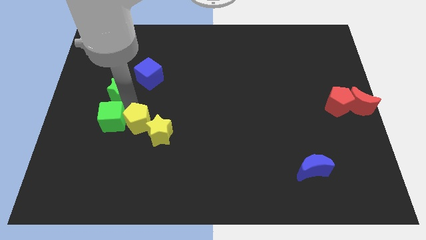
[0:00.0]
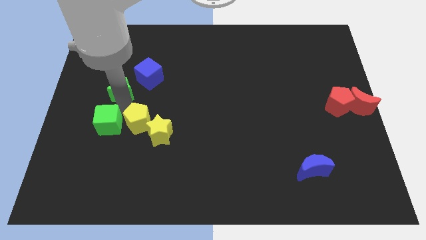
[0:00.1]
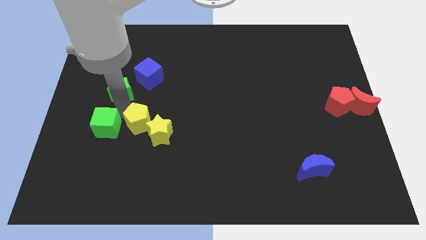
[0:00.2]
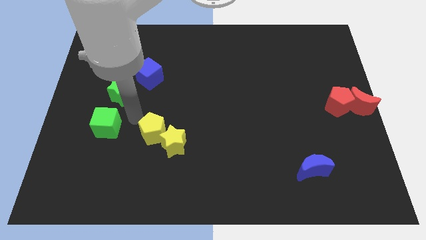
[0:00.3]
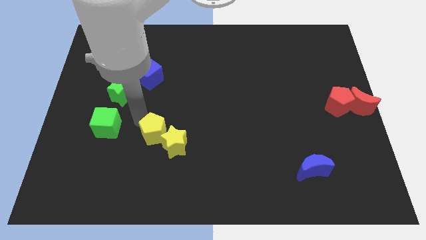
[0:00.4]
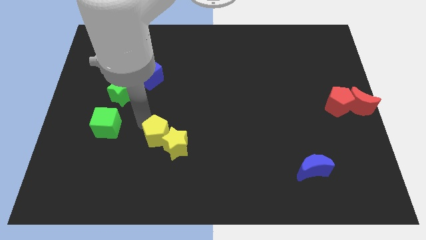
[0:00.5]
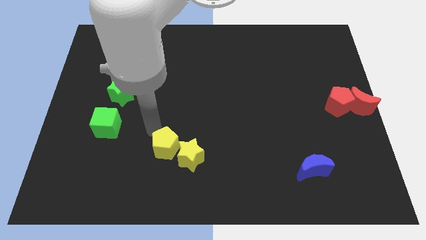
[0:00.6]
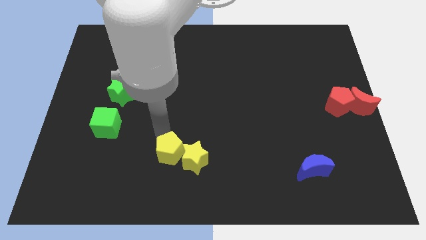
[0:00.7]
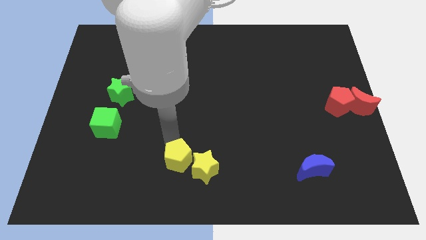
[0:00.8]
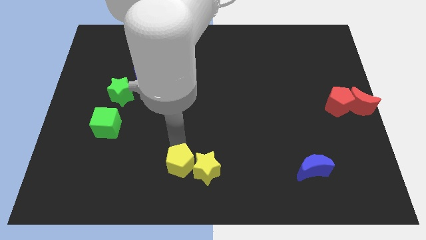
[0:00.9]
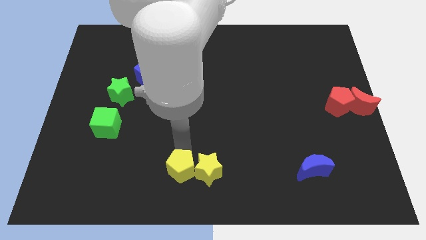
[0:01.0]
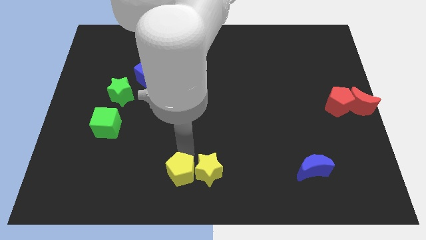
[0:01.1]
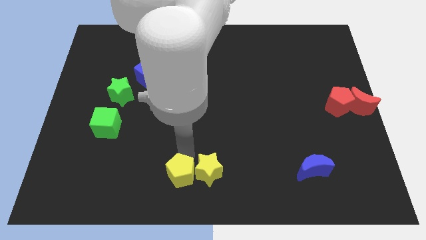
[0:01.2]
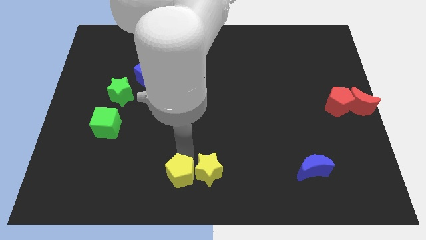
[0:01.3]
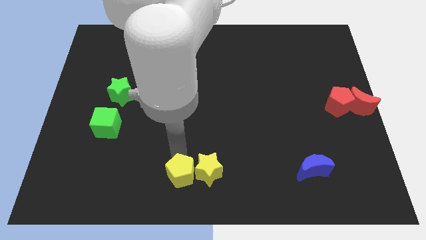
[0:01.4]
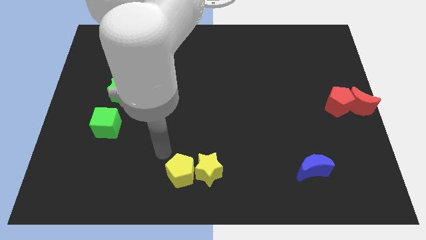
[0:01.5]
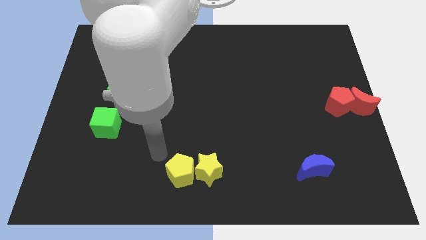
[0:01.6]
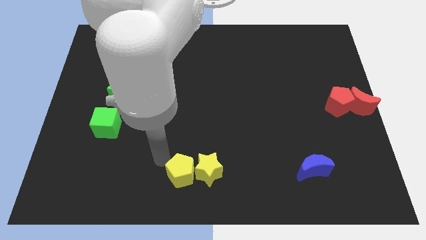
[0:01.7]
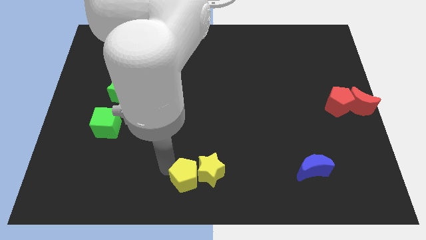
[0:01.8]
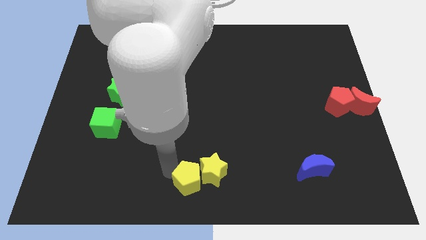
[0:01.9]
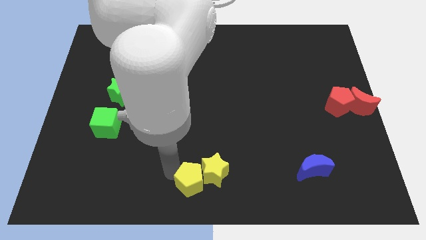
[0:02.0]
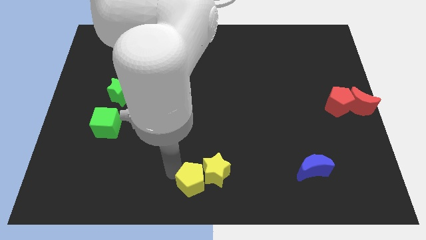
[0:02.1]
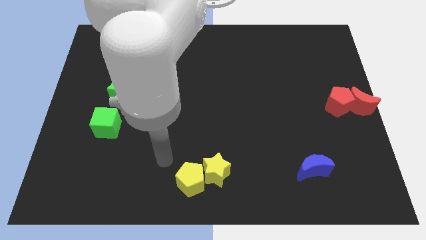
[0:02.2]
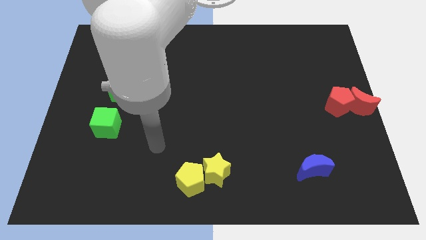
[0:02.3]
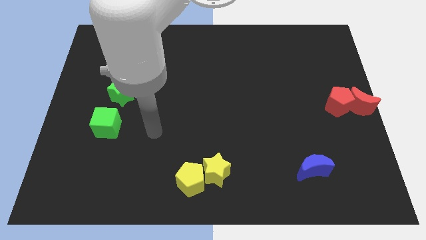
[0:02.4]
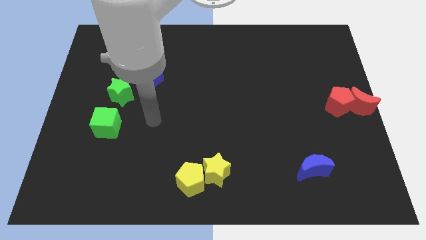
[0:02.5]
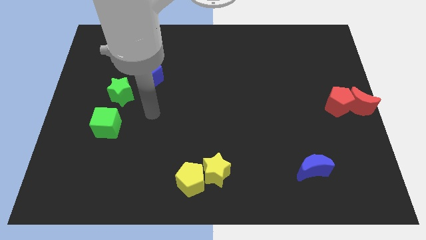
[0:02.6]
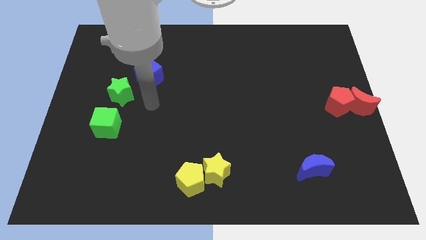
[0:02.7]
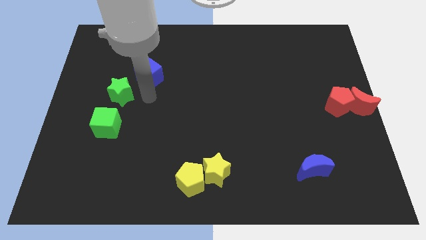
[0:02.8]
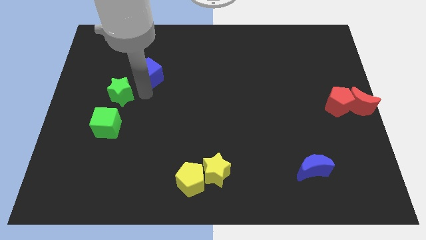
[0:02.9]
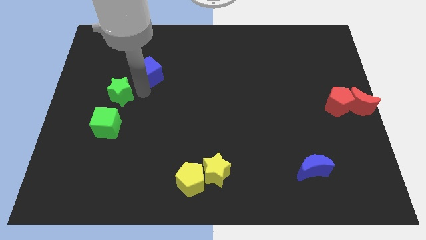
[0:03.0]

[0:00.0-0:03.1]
slide the group of yellow blocks to the bottom center of the board

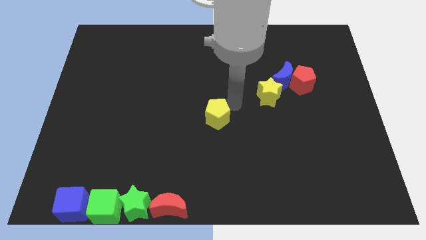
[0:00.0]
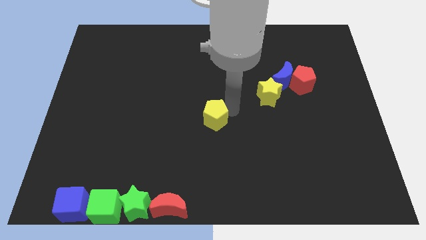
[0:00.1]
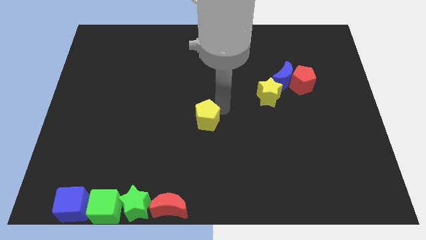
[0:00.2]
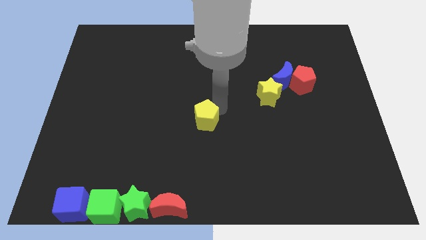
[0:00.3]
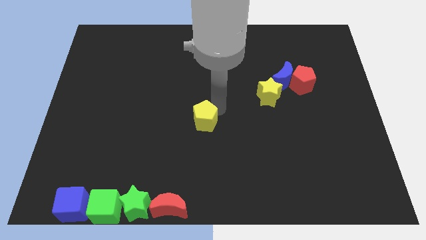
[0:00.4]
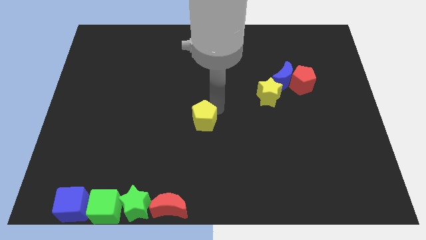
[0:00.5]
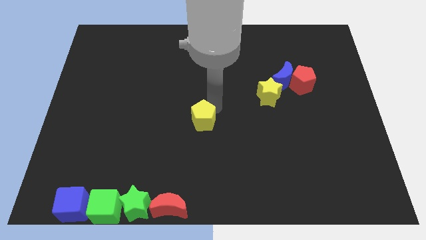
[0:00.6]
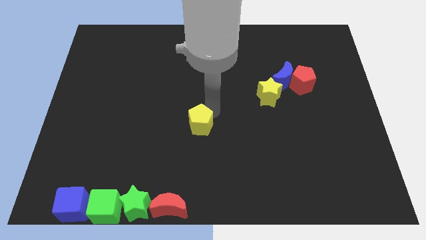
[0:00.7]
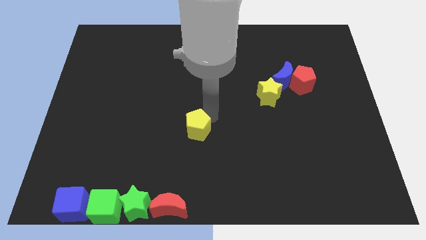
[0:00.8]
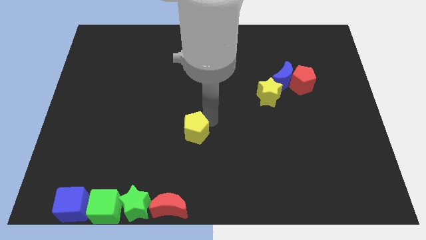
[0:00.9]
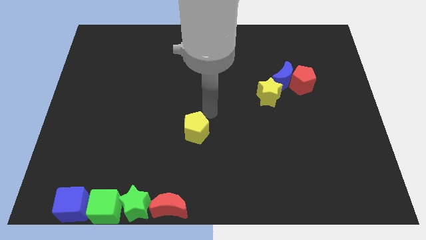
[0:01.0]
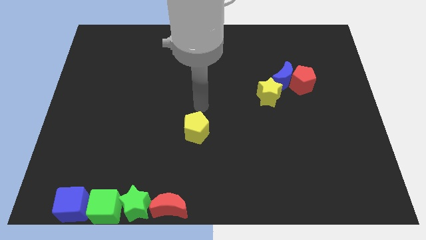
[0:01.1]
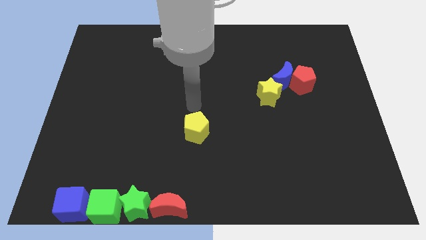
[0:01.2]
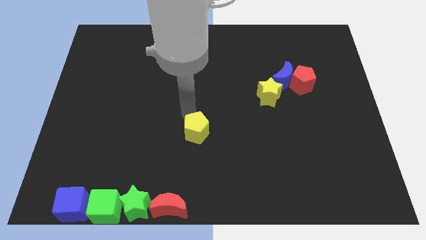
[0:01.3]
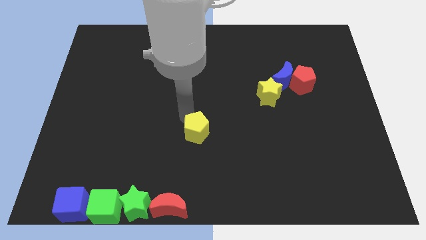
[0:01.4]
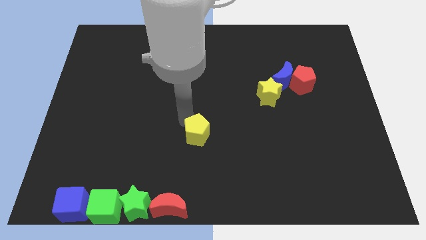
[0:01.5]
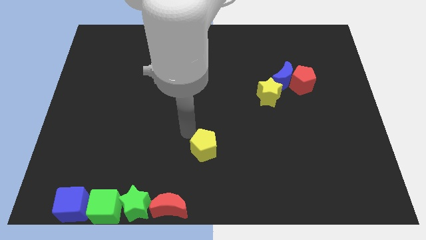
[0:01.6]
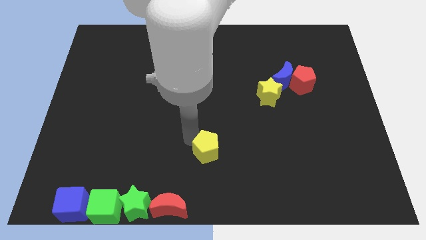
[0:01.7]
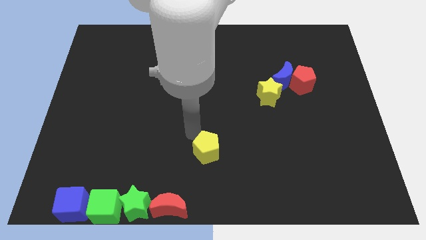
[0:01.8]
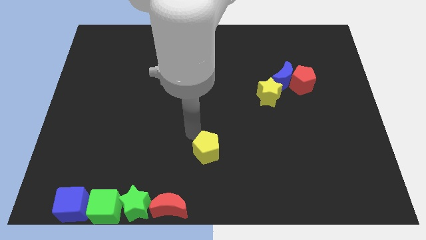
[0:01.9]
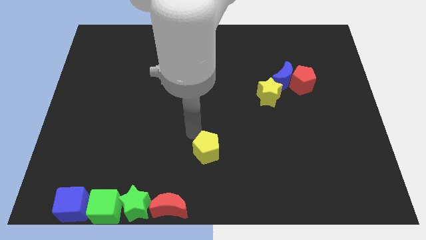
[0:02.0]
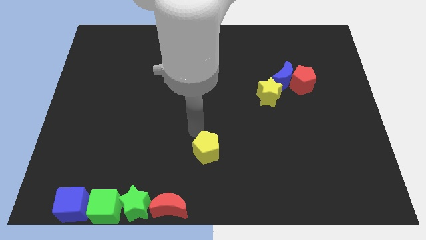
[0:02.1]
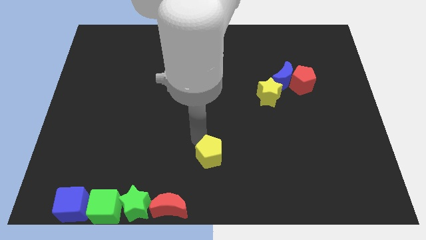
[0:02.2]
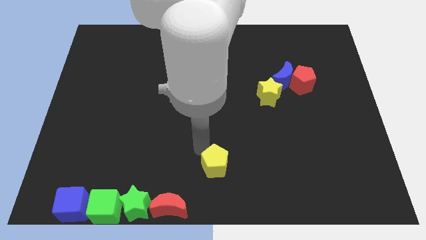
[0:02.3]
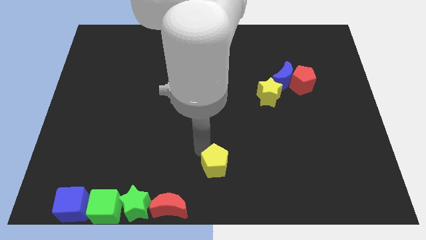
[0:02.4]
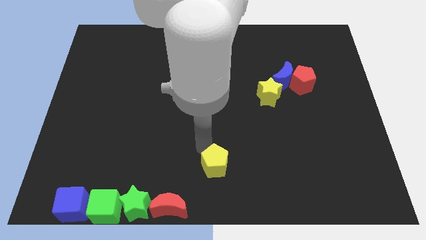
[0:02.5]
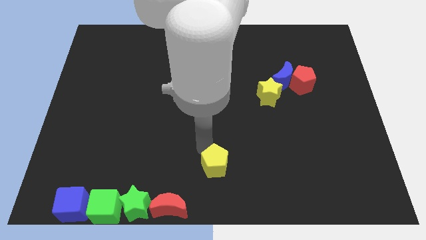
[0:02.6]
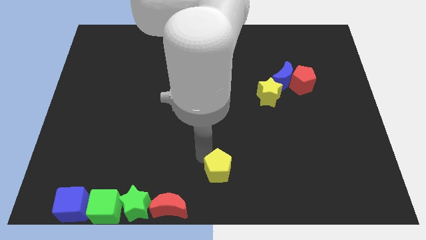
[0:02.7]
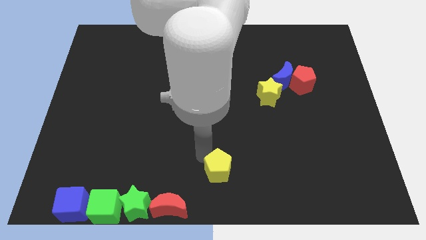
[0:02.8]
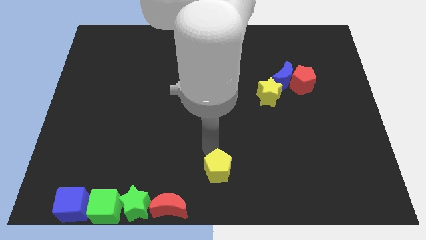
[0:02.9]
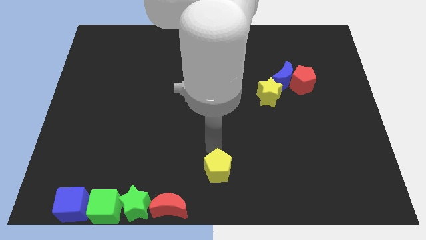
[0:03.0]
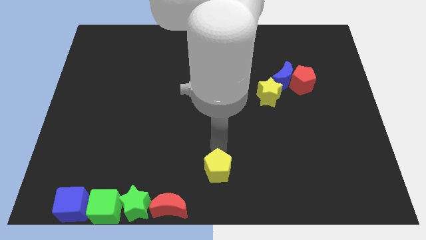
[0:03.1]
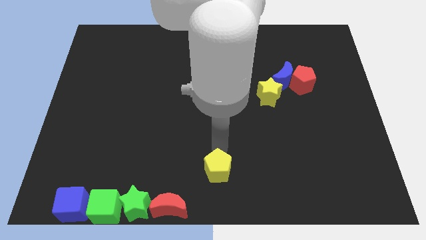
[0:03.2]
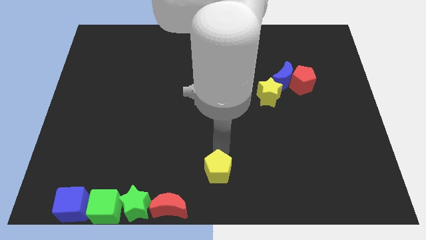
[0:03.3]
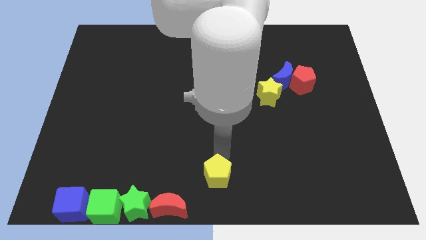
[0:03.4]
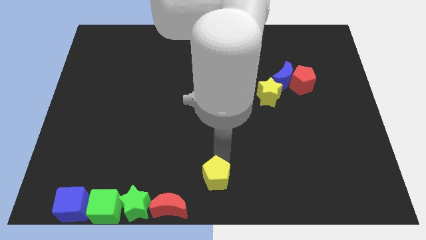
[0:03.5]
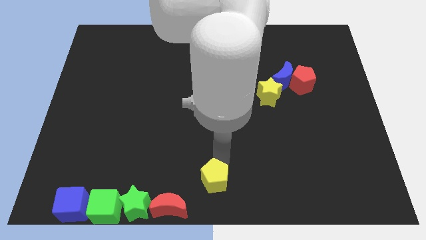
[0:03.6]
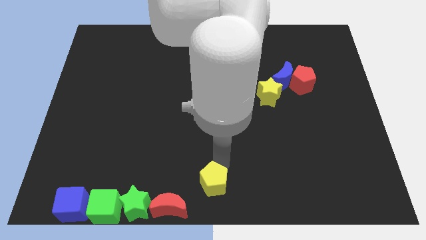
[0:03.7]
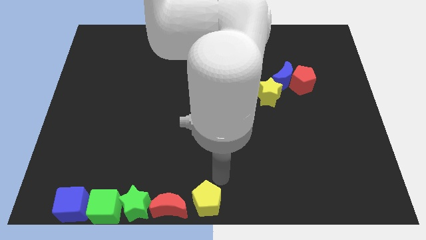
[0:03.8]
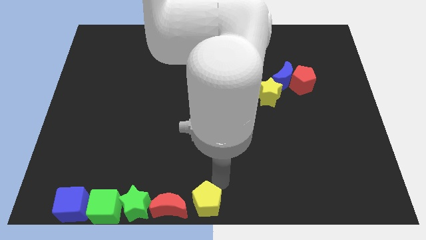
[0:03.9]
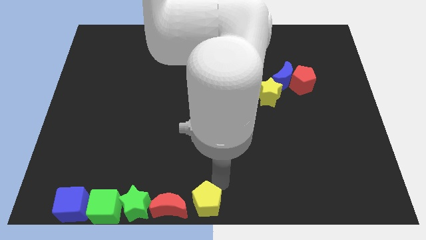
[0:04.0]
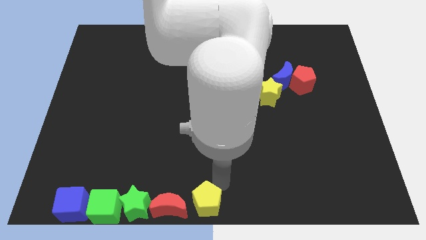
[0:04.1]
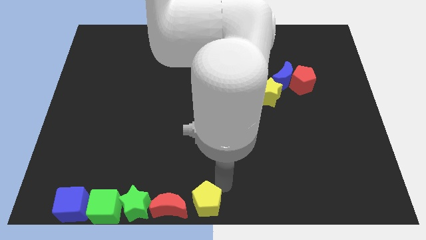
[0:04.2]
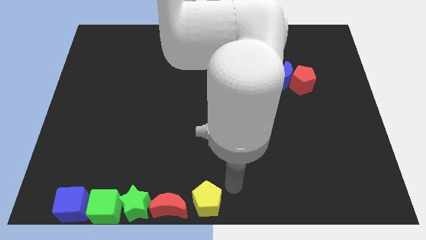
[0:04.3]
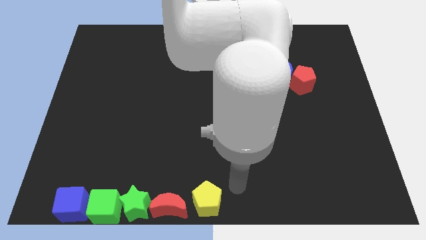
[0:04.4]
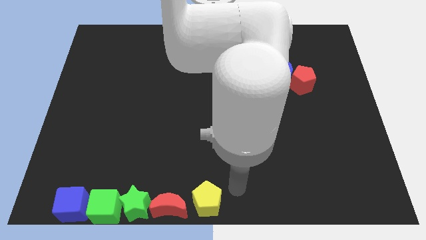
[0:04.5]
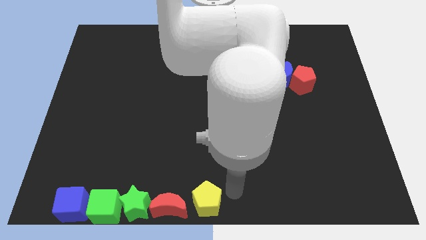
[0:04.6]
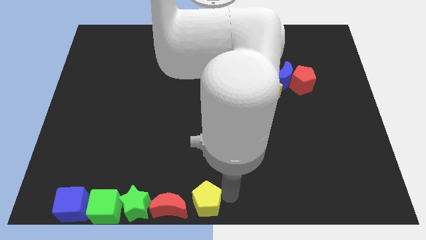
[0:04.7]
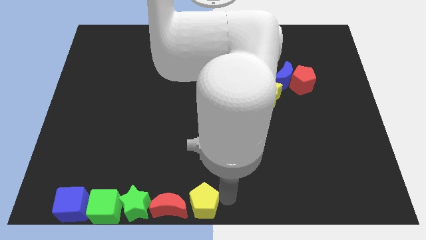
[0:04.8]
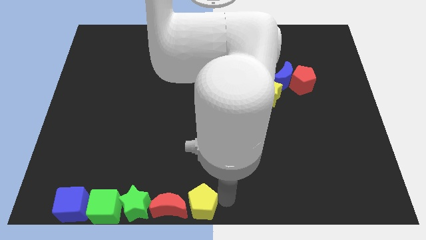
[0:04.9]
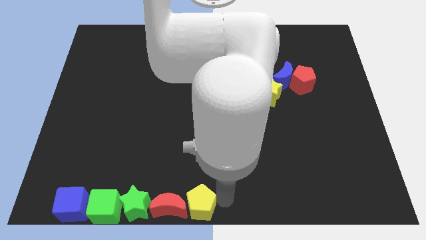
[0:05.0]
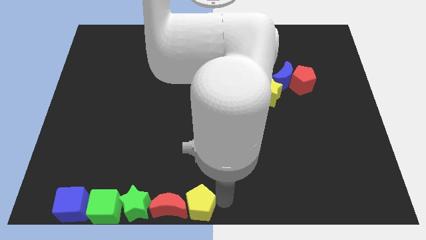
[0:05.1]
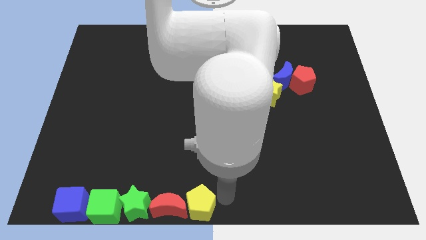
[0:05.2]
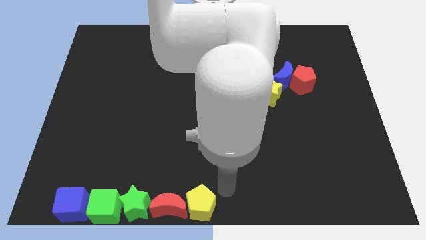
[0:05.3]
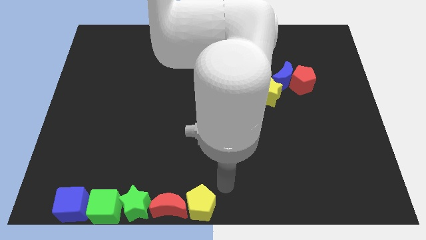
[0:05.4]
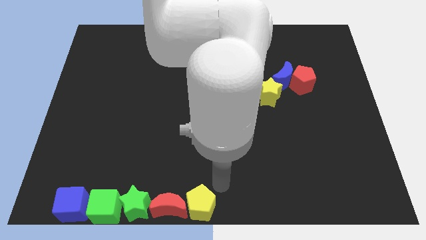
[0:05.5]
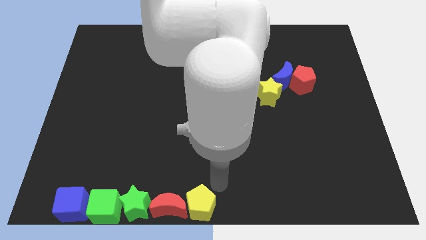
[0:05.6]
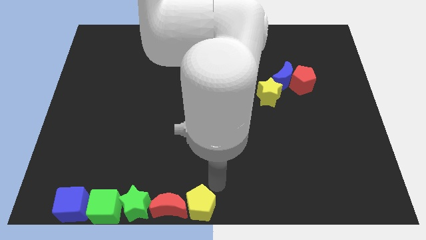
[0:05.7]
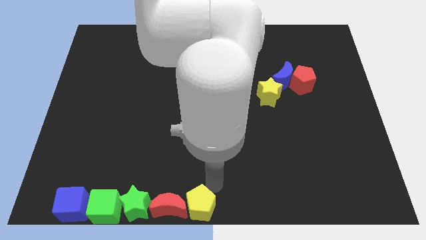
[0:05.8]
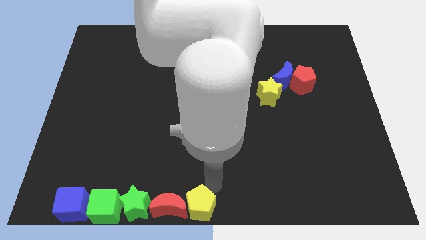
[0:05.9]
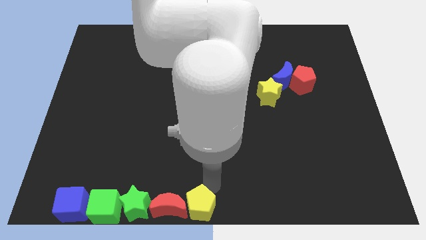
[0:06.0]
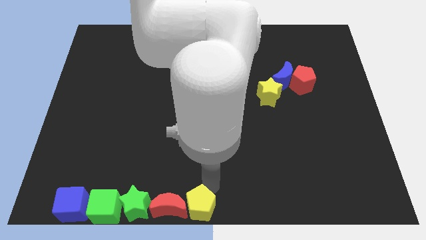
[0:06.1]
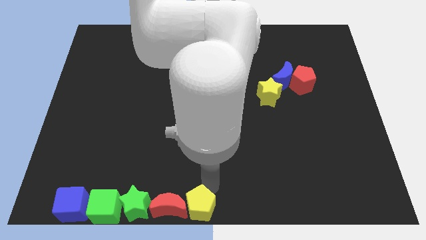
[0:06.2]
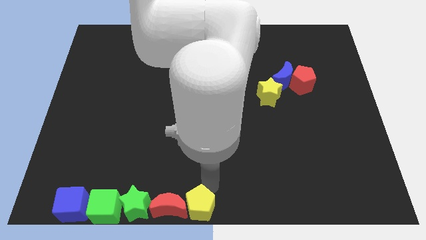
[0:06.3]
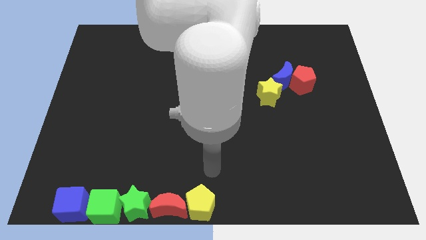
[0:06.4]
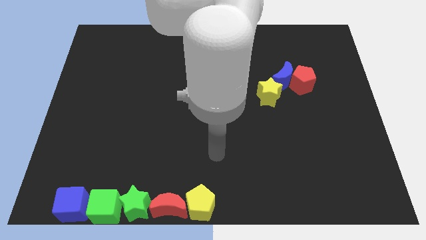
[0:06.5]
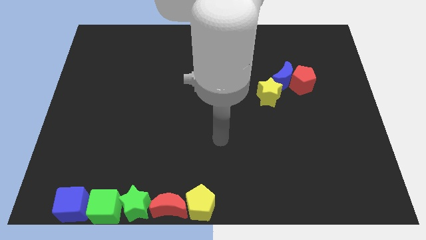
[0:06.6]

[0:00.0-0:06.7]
place the yellow pentagon to the right of the red crescent
